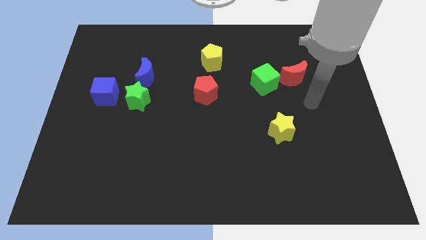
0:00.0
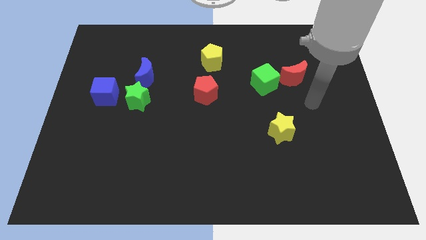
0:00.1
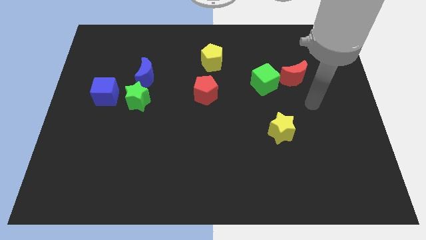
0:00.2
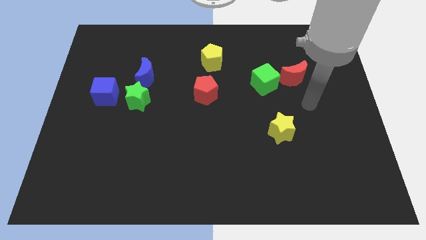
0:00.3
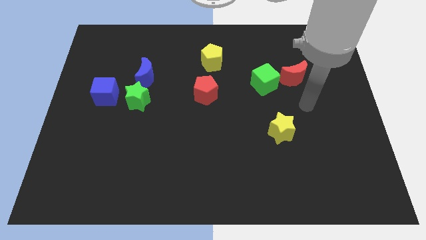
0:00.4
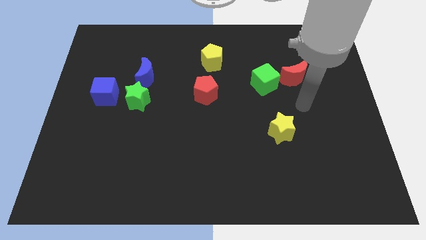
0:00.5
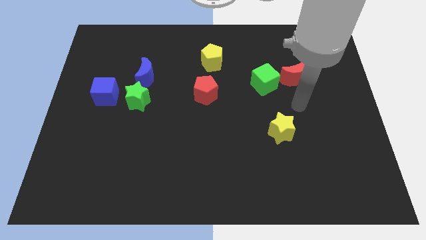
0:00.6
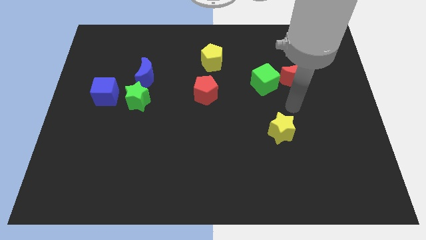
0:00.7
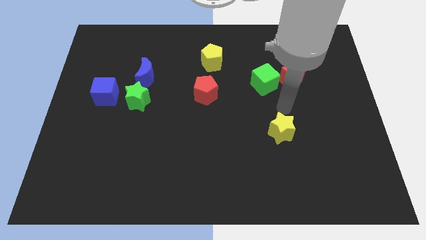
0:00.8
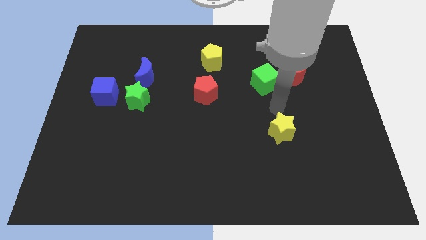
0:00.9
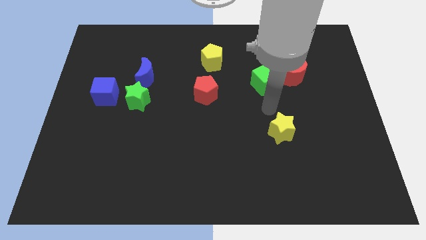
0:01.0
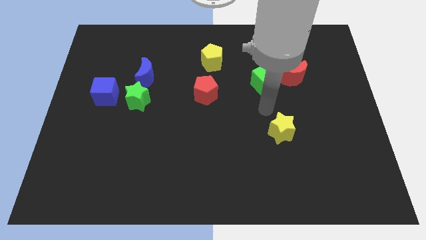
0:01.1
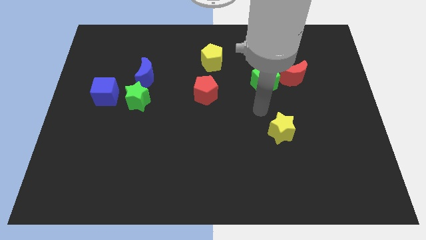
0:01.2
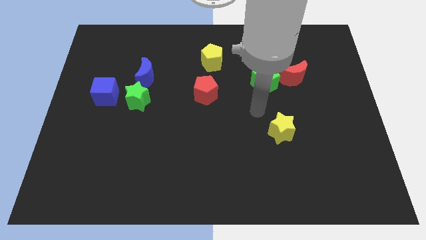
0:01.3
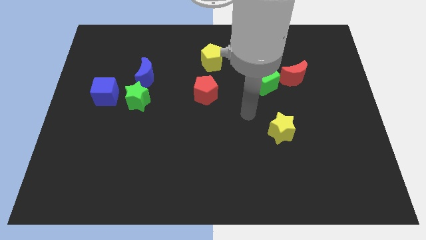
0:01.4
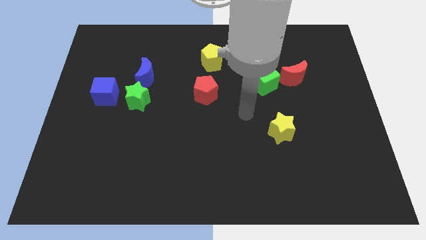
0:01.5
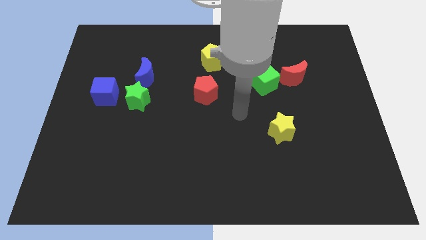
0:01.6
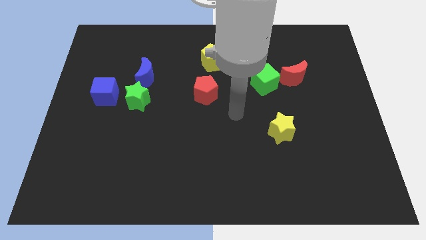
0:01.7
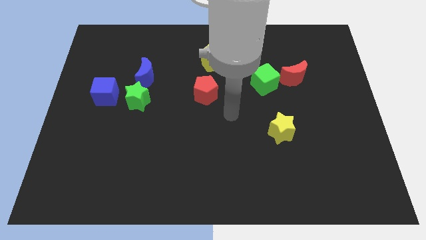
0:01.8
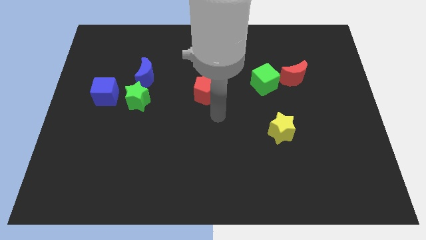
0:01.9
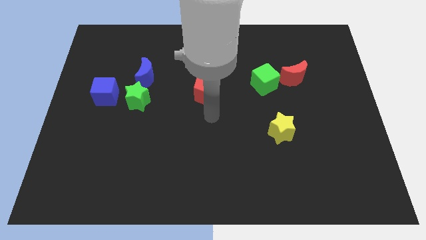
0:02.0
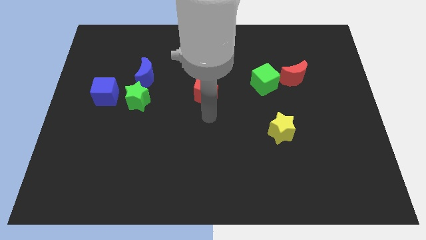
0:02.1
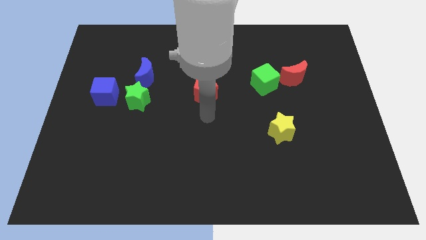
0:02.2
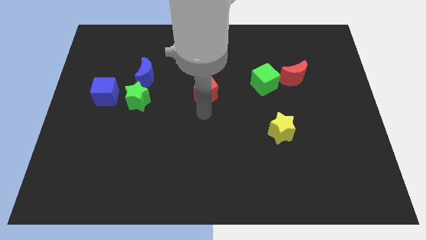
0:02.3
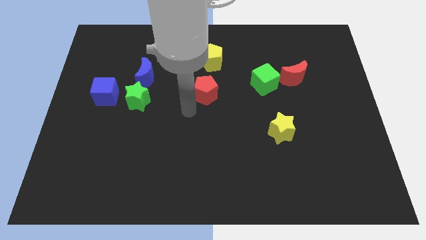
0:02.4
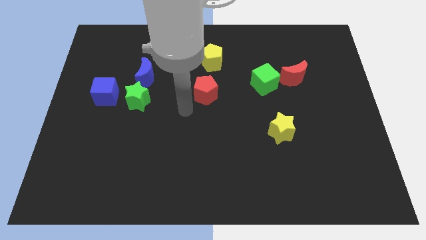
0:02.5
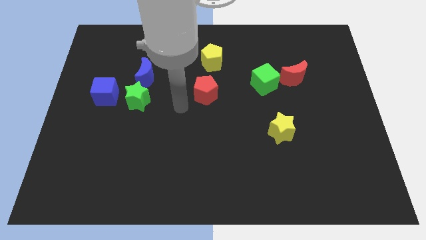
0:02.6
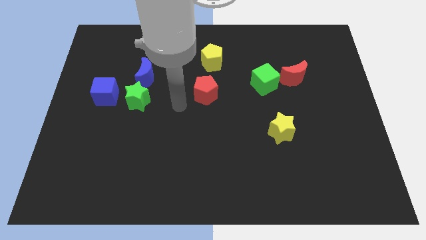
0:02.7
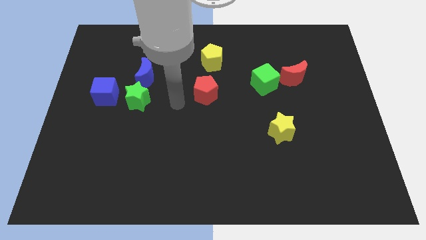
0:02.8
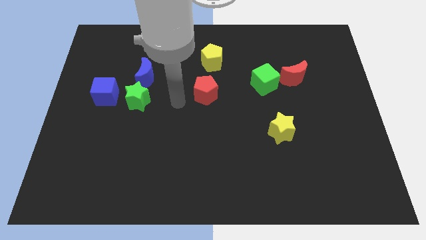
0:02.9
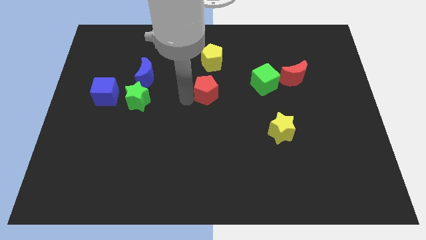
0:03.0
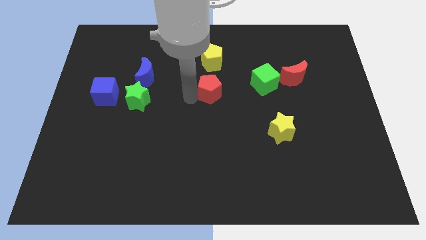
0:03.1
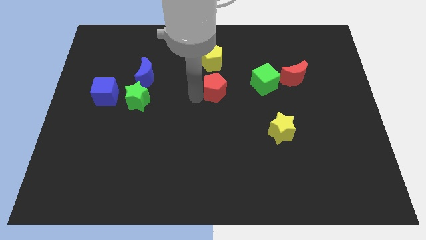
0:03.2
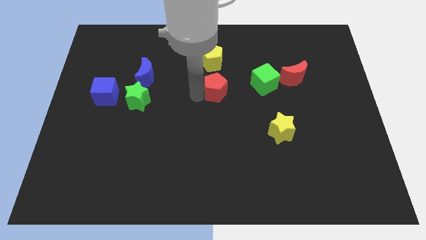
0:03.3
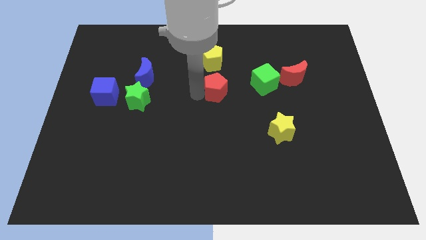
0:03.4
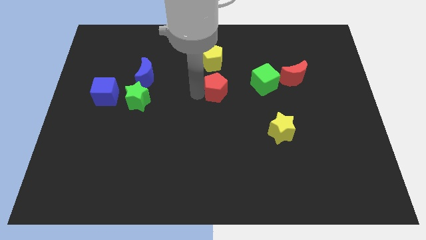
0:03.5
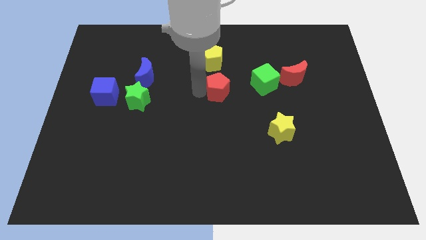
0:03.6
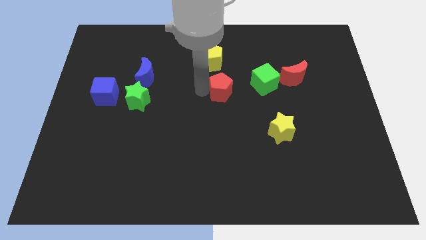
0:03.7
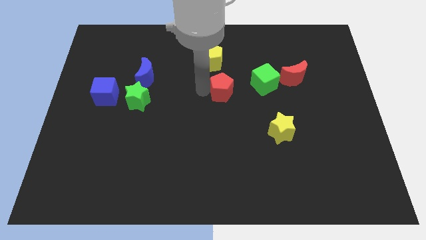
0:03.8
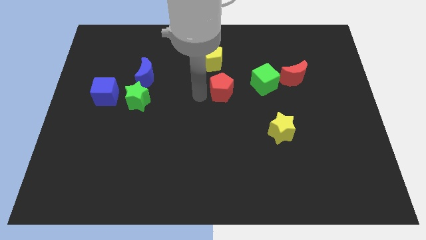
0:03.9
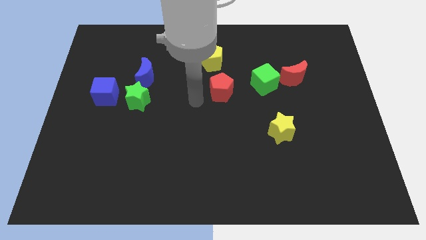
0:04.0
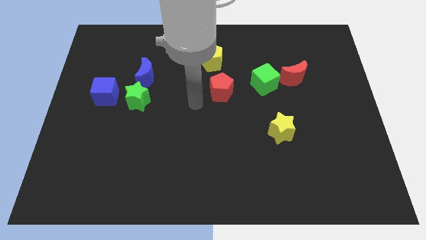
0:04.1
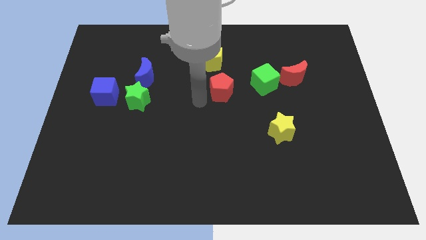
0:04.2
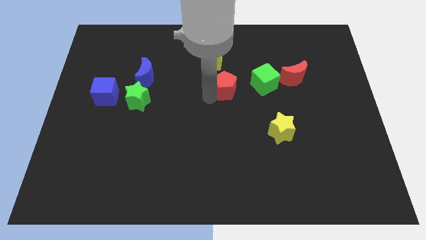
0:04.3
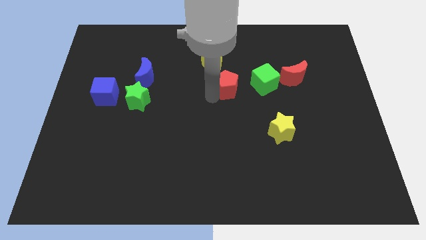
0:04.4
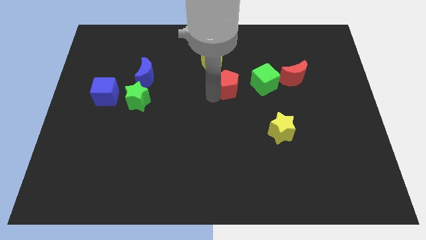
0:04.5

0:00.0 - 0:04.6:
push the red pentagon towards the green cube

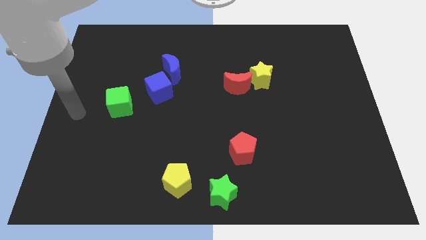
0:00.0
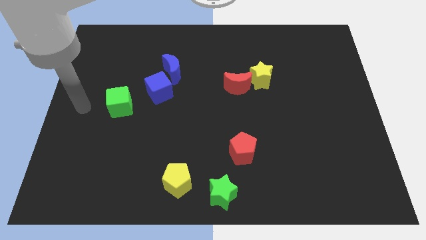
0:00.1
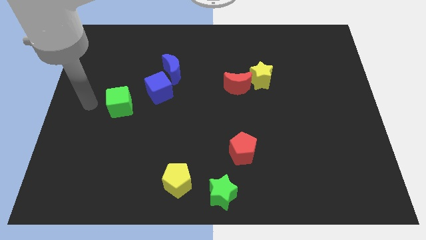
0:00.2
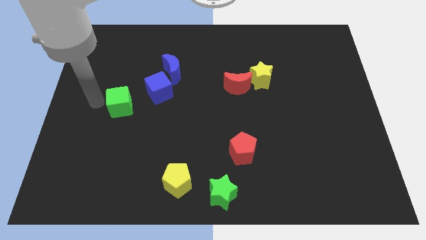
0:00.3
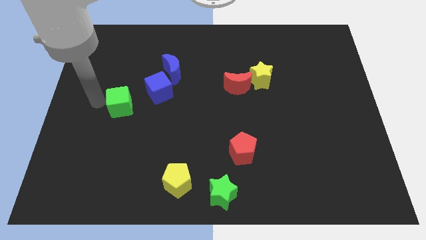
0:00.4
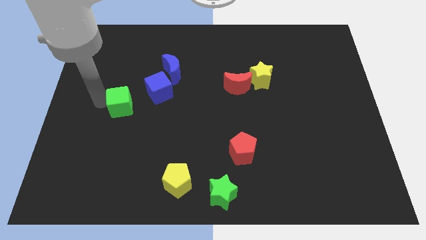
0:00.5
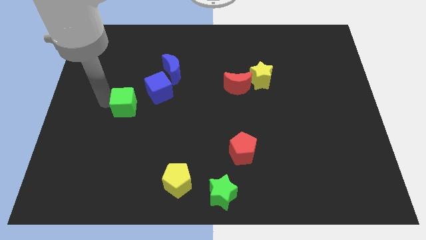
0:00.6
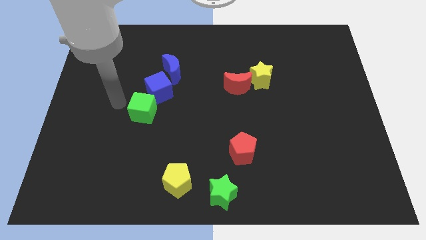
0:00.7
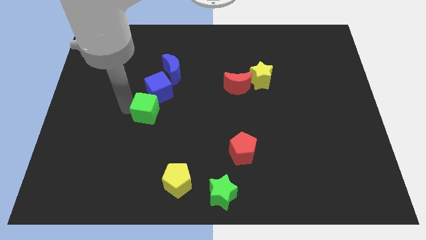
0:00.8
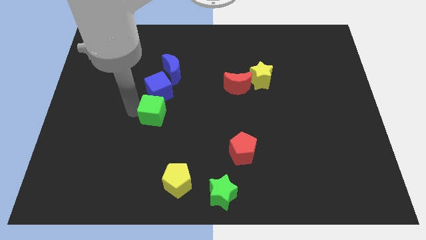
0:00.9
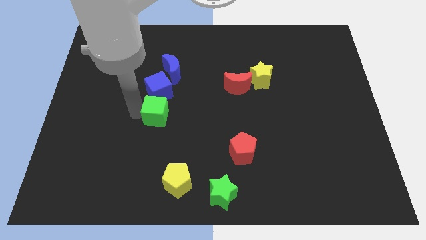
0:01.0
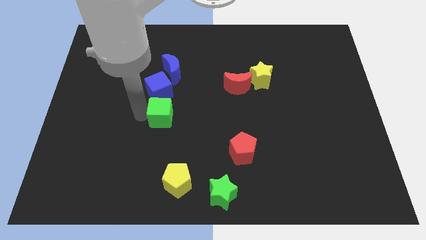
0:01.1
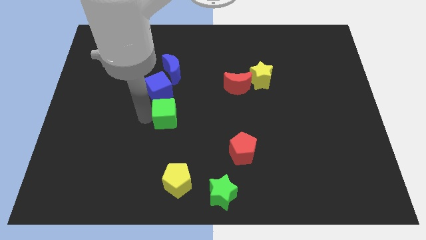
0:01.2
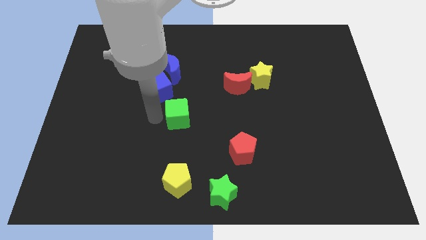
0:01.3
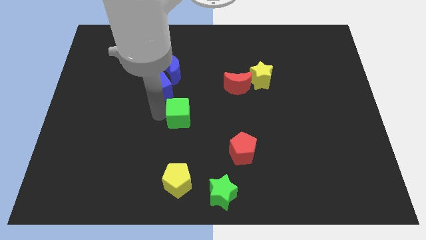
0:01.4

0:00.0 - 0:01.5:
move the green cube to the bottom of the blue crescent

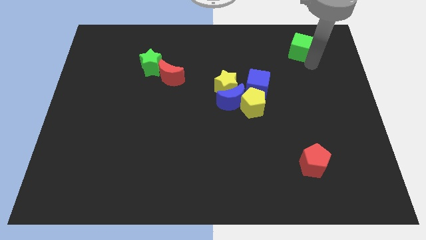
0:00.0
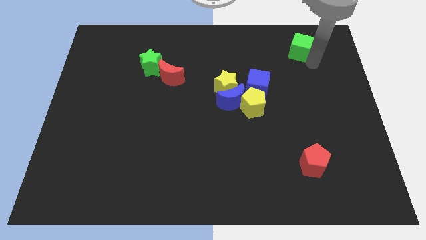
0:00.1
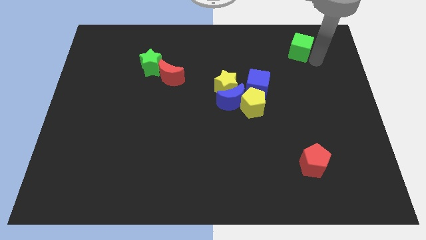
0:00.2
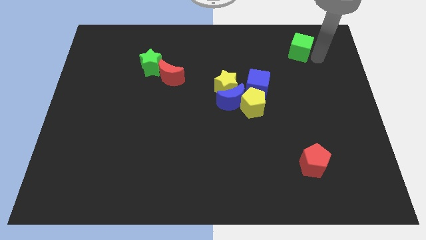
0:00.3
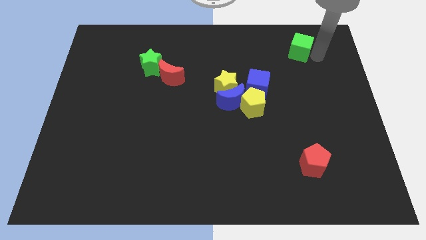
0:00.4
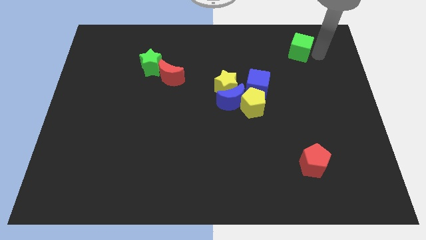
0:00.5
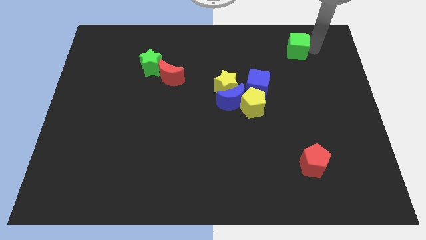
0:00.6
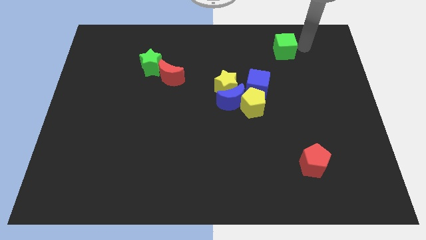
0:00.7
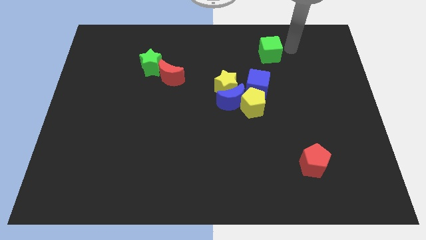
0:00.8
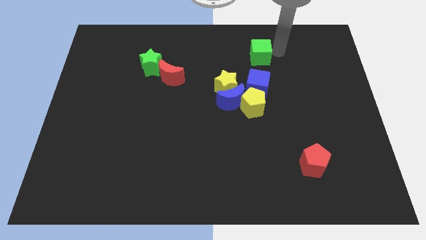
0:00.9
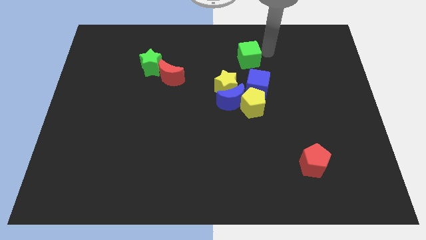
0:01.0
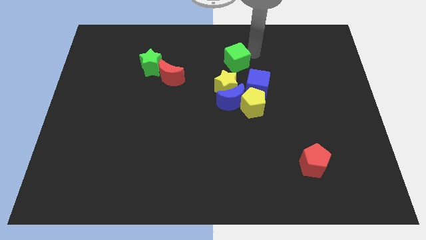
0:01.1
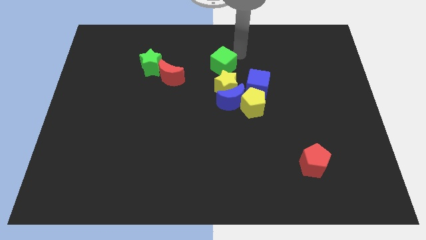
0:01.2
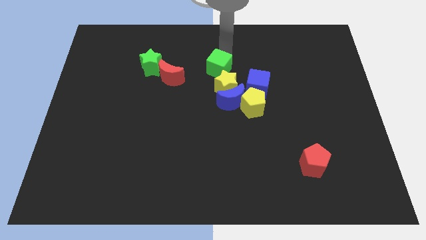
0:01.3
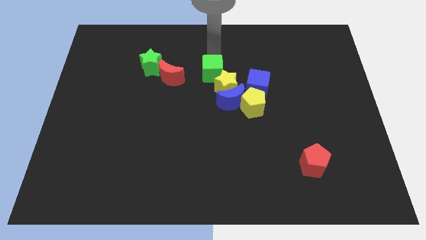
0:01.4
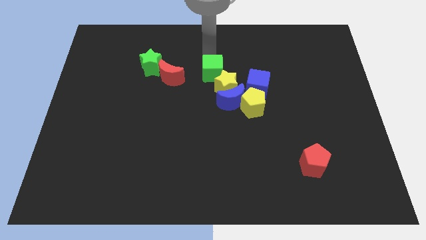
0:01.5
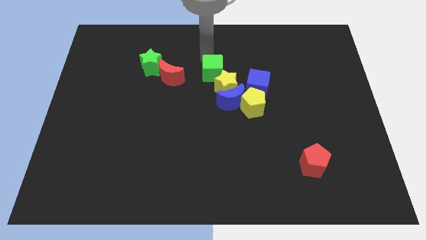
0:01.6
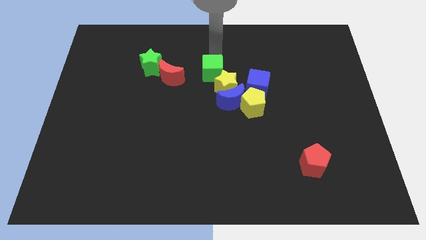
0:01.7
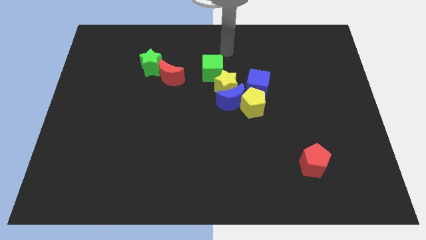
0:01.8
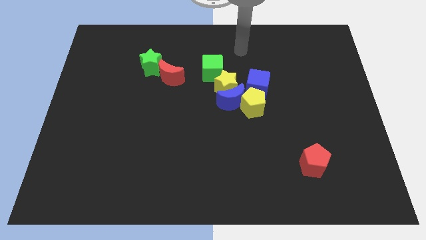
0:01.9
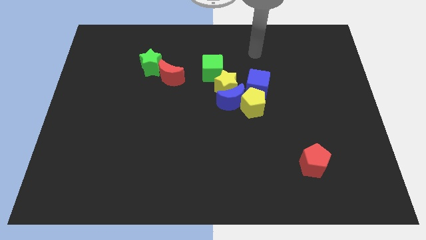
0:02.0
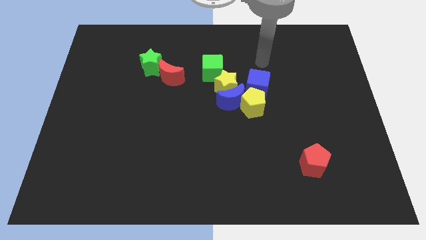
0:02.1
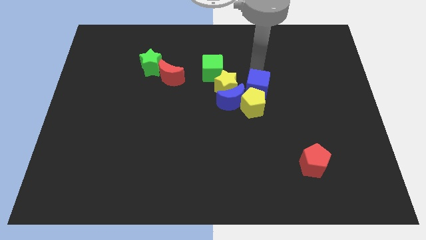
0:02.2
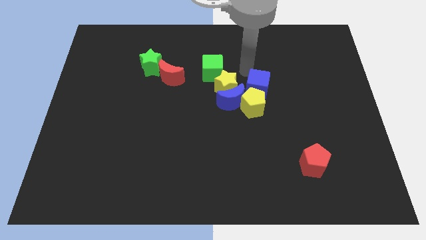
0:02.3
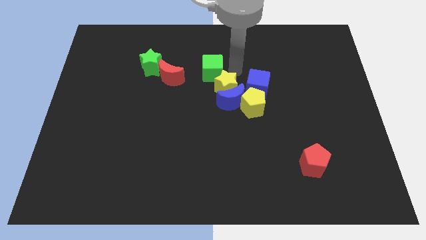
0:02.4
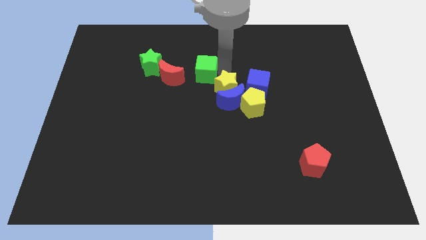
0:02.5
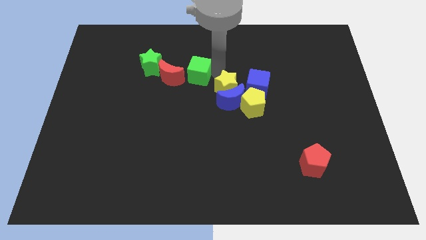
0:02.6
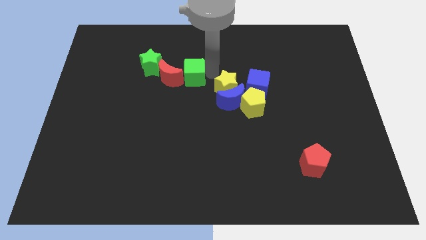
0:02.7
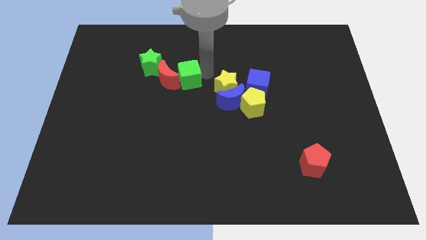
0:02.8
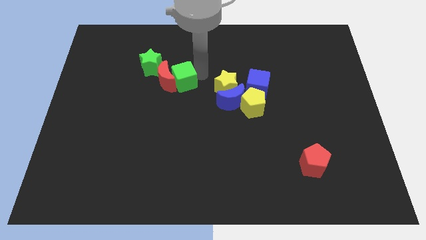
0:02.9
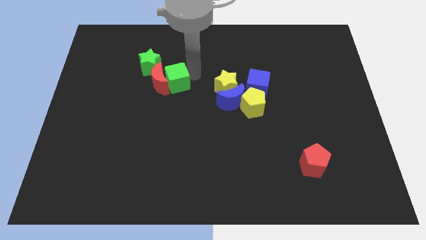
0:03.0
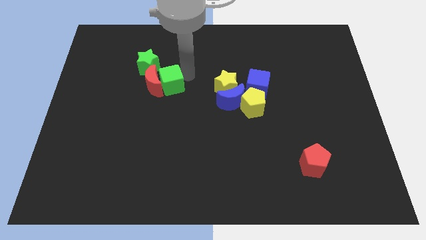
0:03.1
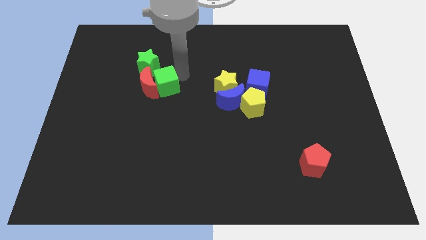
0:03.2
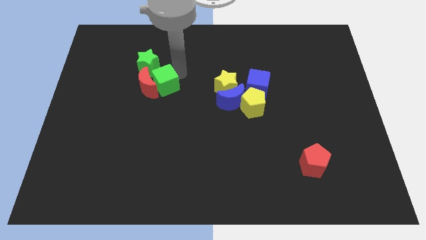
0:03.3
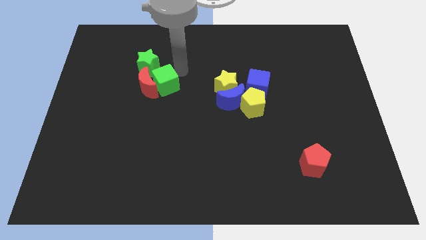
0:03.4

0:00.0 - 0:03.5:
push the green cube to the right of the red crescent
